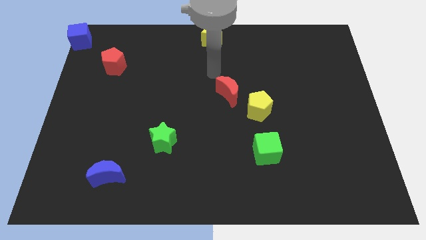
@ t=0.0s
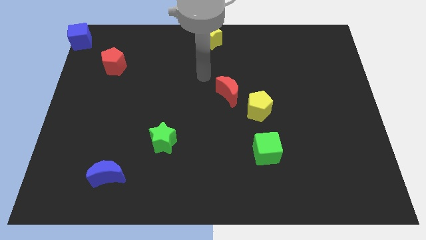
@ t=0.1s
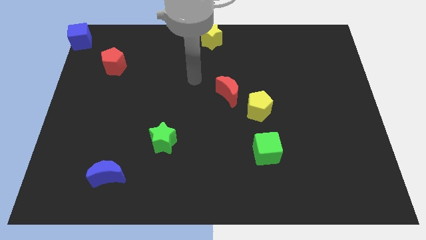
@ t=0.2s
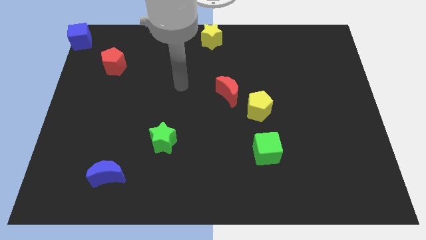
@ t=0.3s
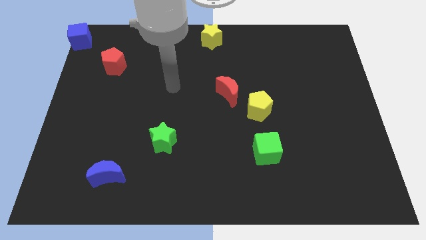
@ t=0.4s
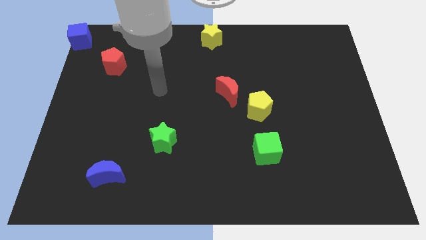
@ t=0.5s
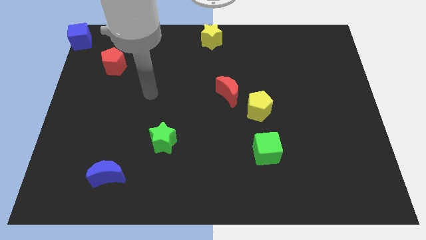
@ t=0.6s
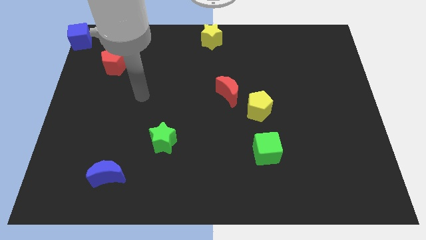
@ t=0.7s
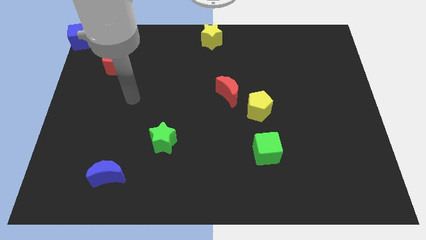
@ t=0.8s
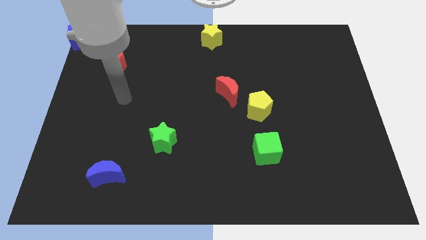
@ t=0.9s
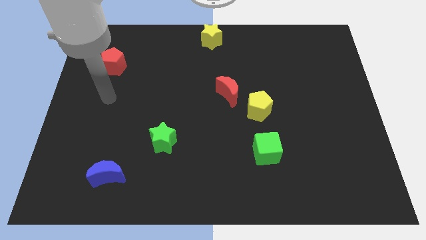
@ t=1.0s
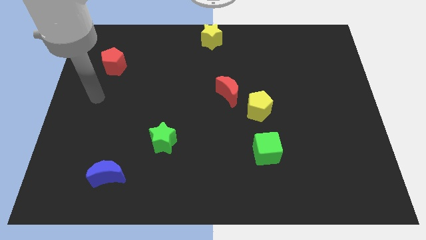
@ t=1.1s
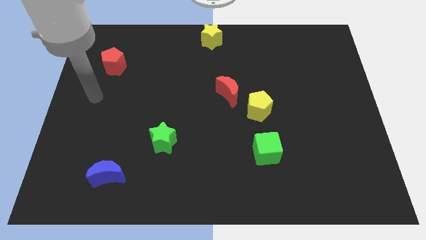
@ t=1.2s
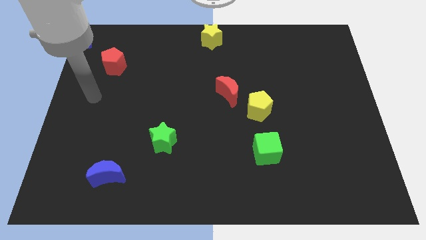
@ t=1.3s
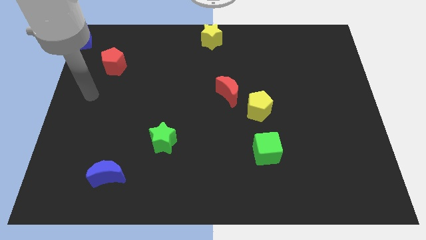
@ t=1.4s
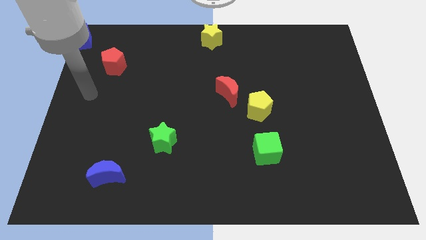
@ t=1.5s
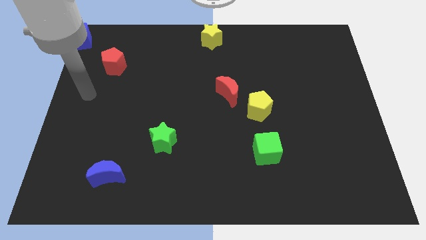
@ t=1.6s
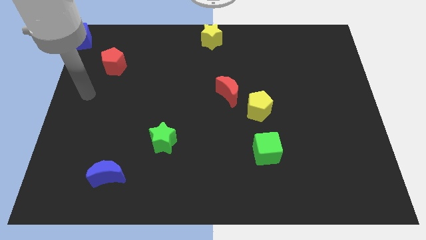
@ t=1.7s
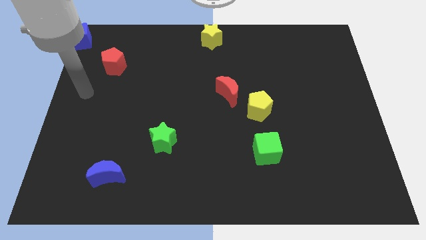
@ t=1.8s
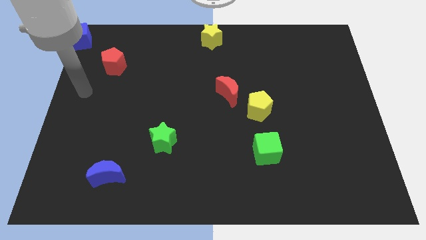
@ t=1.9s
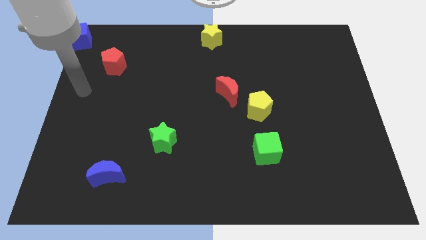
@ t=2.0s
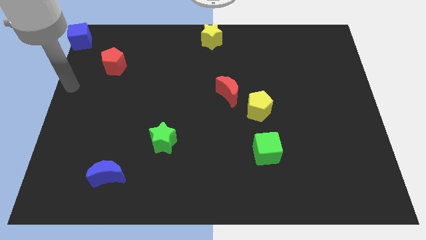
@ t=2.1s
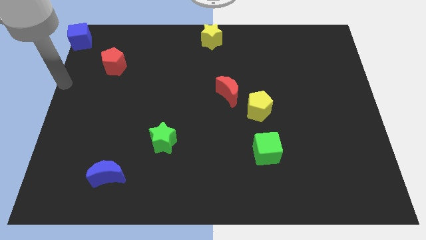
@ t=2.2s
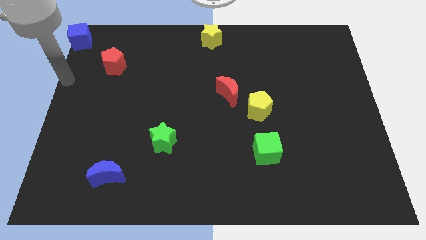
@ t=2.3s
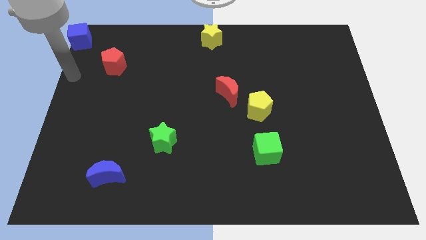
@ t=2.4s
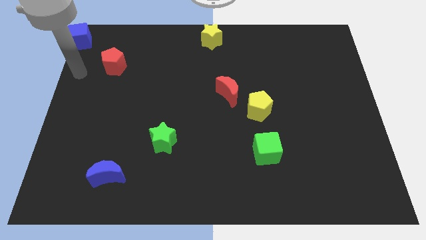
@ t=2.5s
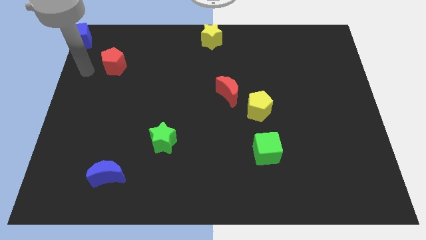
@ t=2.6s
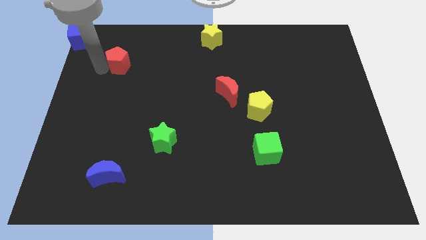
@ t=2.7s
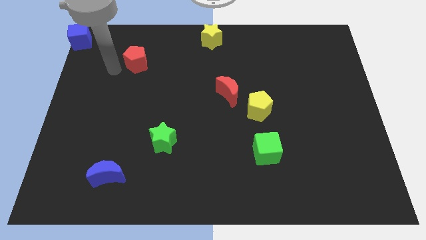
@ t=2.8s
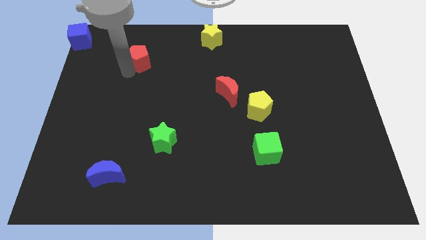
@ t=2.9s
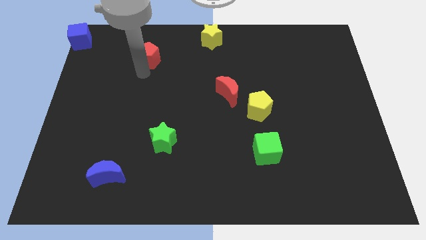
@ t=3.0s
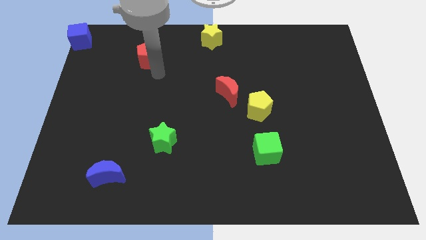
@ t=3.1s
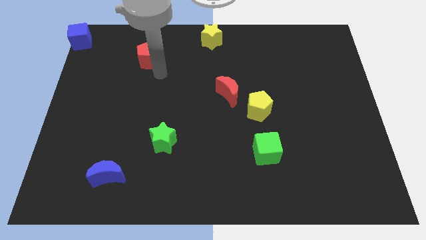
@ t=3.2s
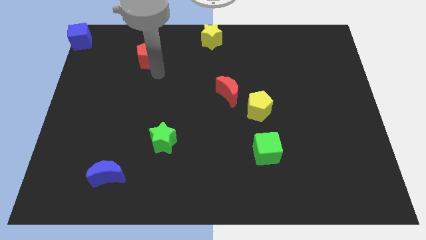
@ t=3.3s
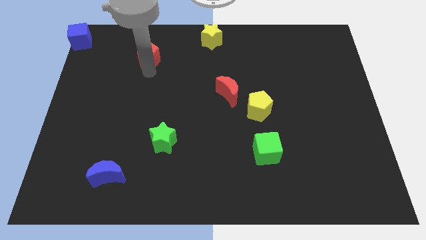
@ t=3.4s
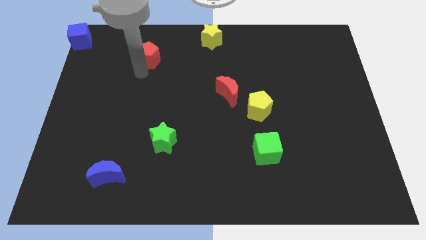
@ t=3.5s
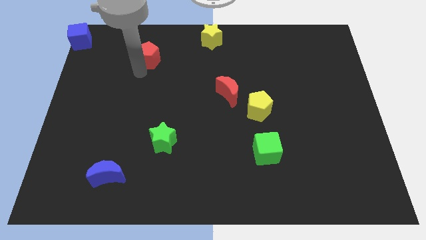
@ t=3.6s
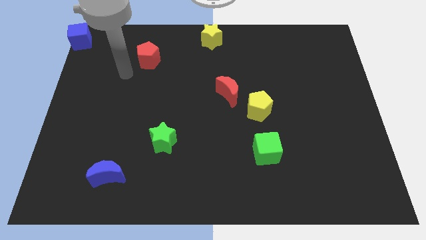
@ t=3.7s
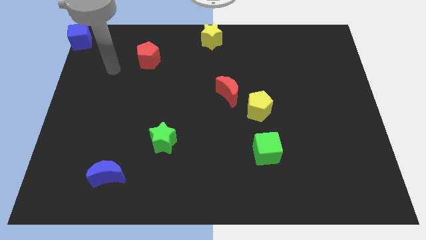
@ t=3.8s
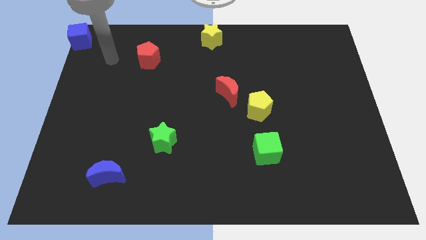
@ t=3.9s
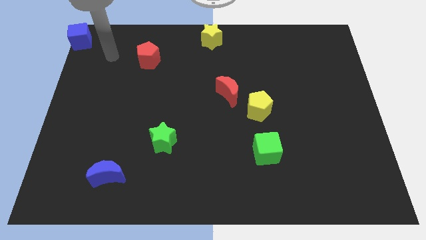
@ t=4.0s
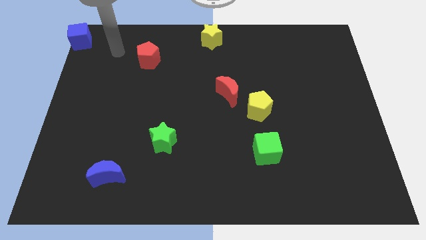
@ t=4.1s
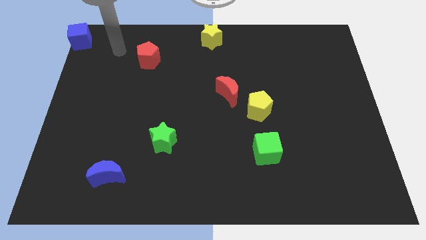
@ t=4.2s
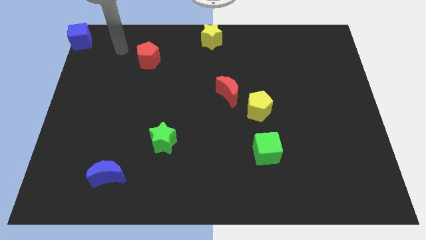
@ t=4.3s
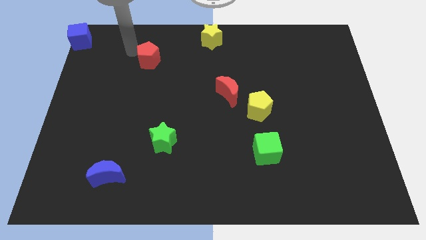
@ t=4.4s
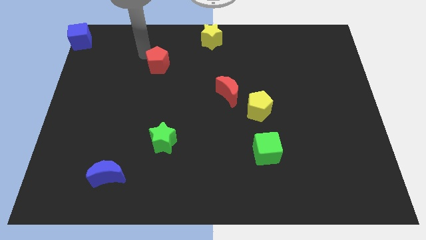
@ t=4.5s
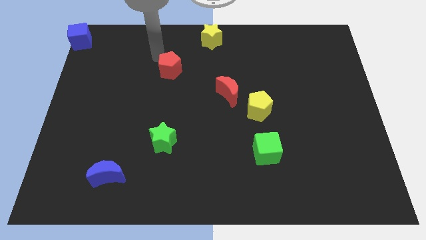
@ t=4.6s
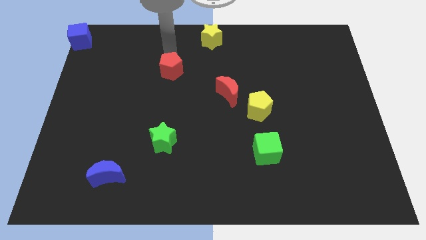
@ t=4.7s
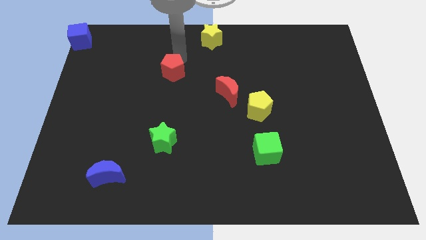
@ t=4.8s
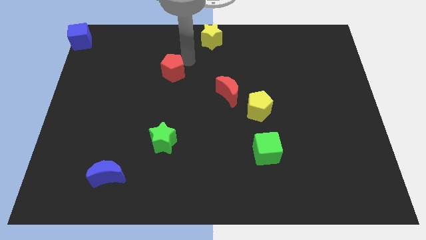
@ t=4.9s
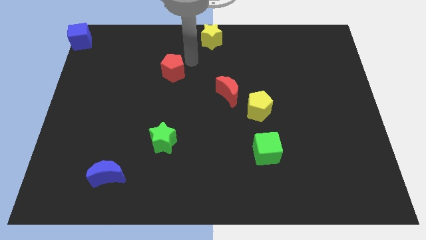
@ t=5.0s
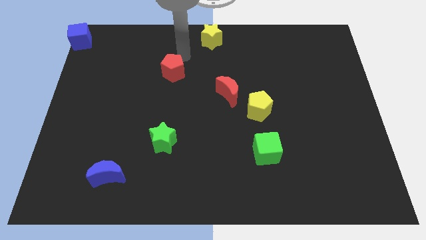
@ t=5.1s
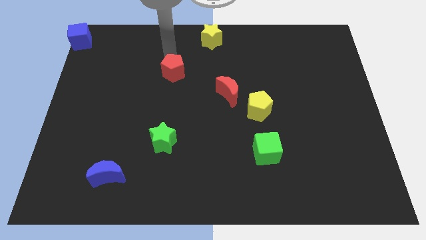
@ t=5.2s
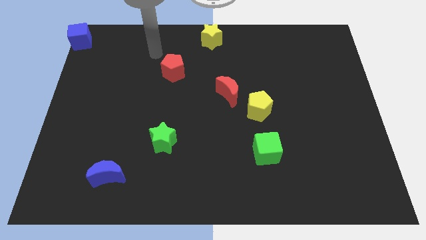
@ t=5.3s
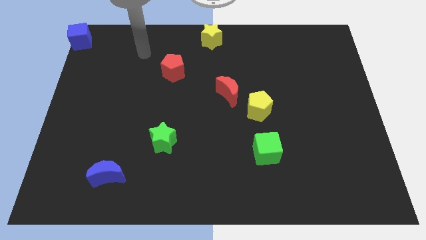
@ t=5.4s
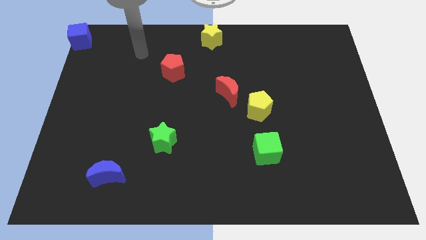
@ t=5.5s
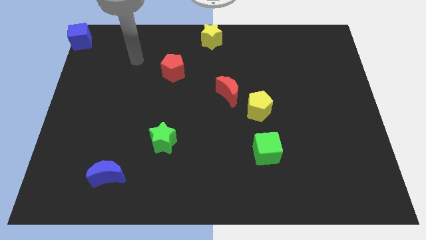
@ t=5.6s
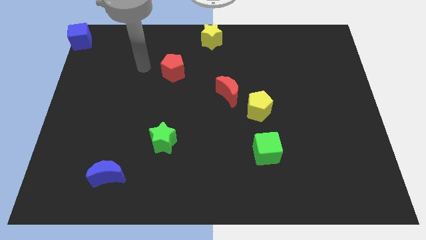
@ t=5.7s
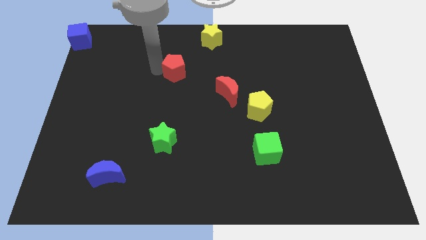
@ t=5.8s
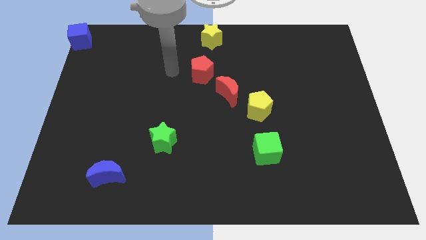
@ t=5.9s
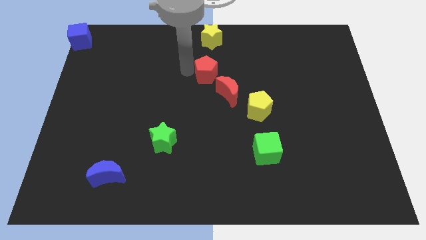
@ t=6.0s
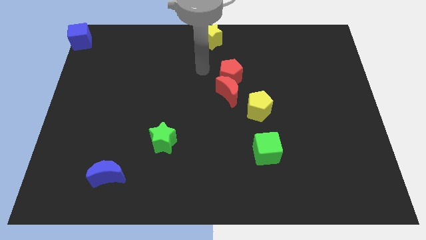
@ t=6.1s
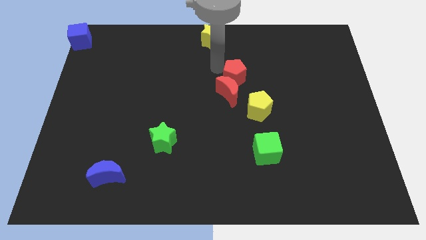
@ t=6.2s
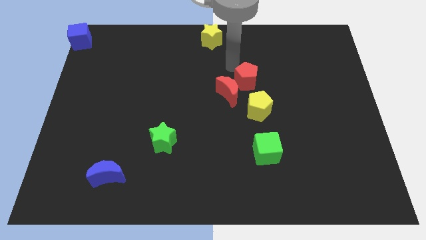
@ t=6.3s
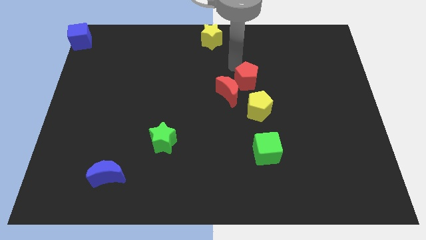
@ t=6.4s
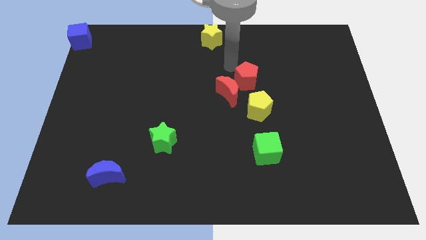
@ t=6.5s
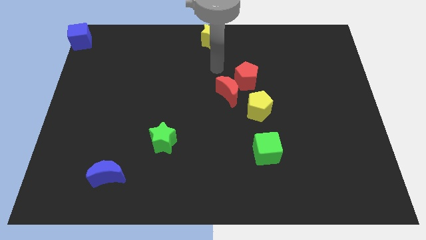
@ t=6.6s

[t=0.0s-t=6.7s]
move red pentagon to the right of red crescent

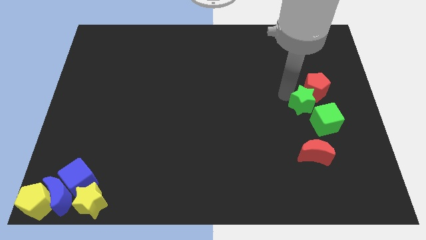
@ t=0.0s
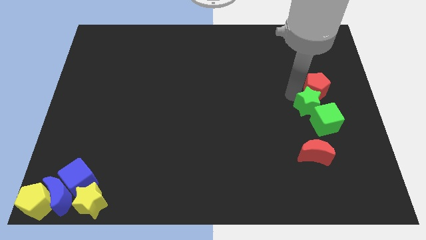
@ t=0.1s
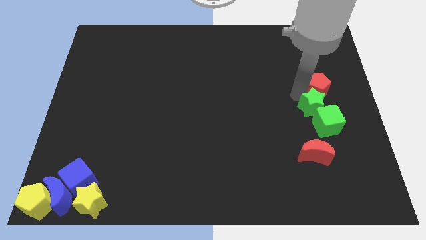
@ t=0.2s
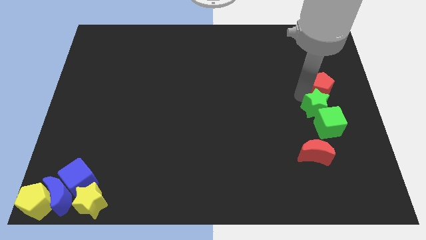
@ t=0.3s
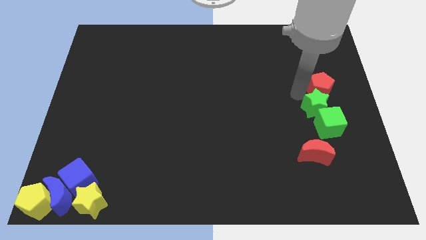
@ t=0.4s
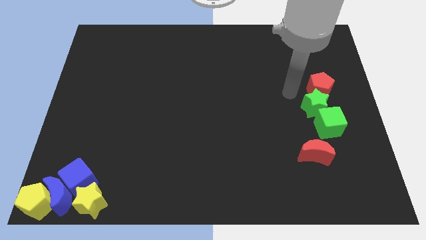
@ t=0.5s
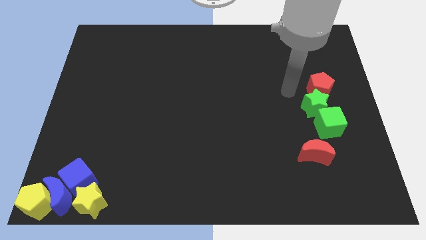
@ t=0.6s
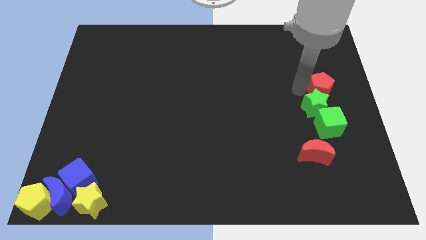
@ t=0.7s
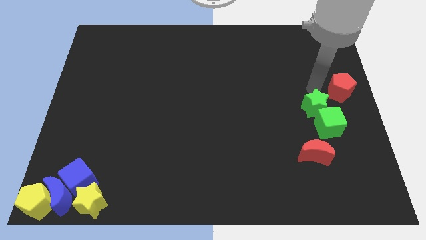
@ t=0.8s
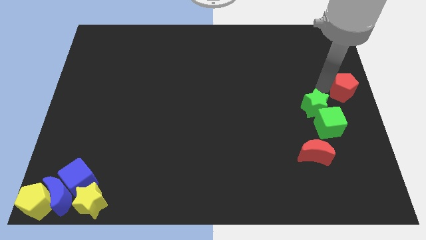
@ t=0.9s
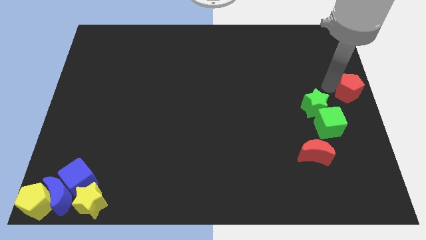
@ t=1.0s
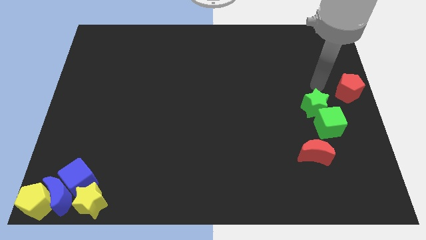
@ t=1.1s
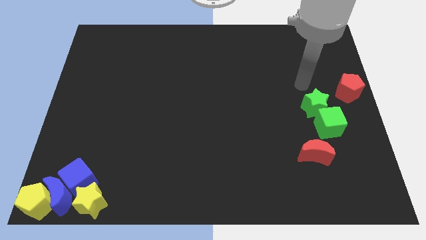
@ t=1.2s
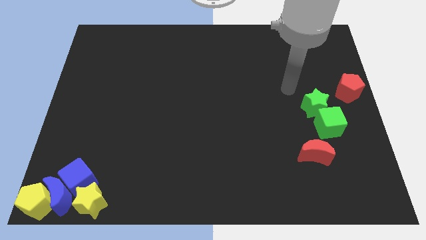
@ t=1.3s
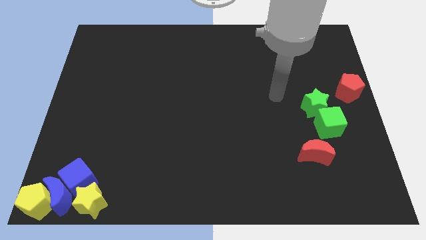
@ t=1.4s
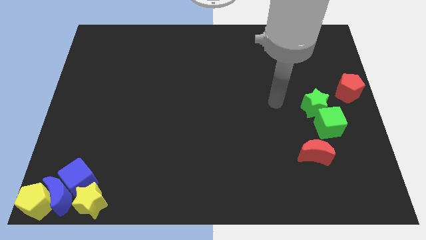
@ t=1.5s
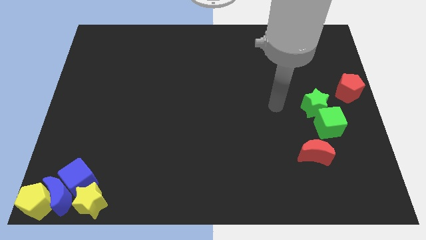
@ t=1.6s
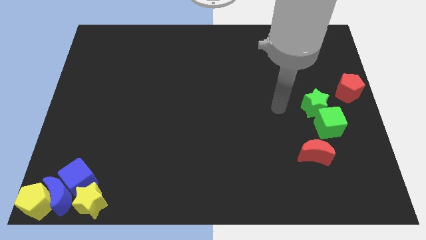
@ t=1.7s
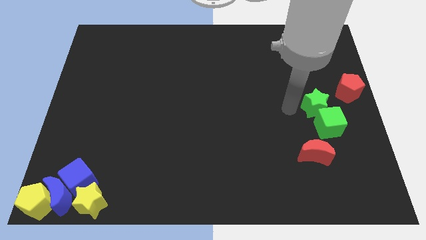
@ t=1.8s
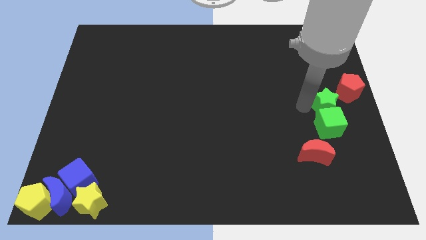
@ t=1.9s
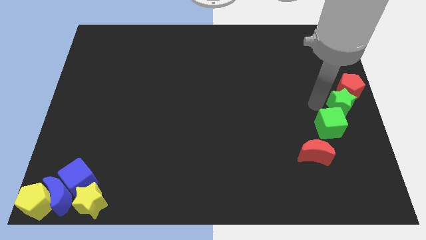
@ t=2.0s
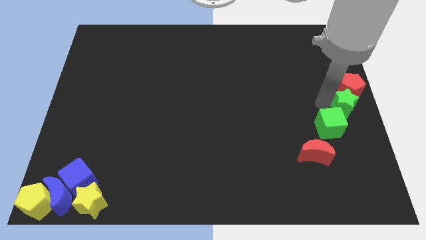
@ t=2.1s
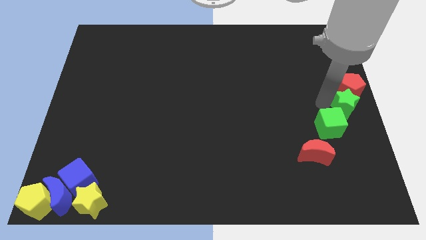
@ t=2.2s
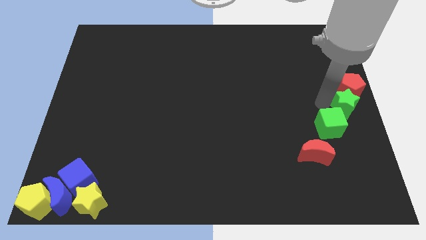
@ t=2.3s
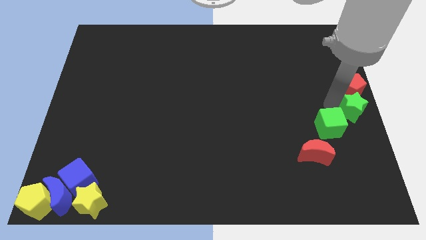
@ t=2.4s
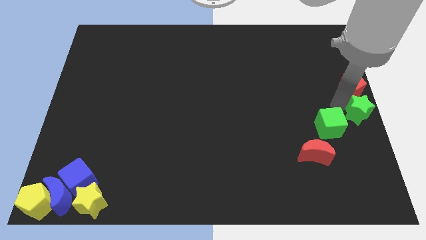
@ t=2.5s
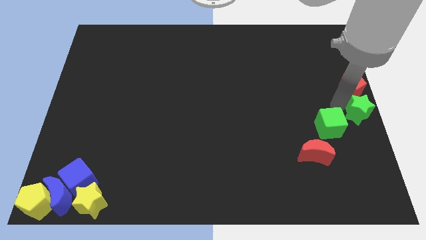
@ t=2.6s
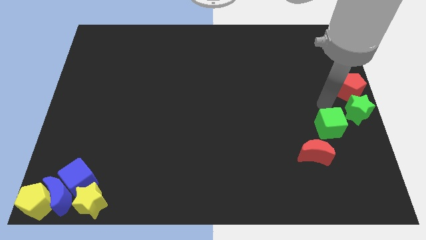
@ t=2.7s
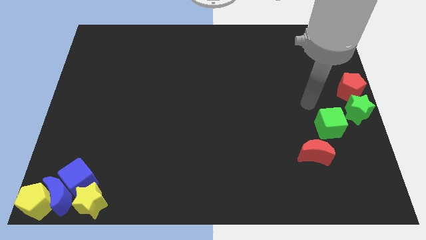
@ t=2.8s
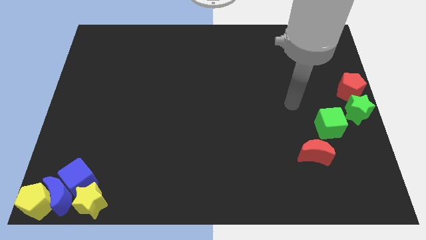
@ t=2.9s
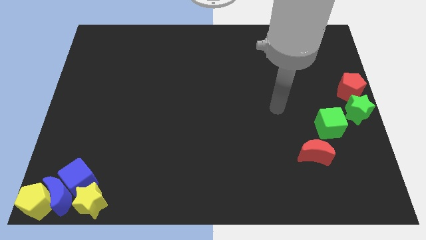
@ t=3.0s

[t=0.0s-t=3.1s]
place the red pentagon and green star at the center right of the board
